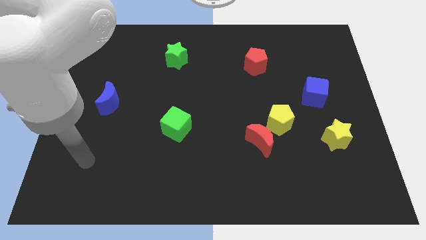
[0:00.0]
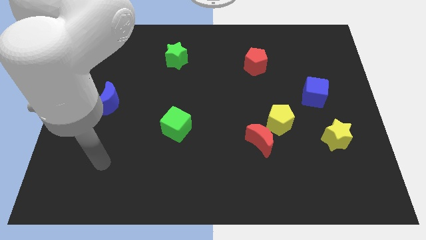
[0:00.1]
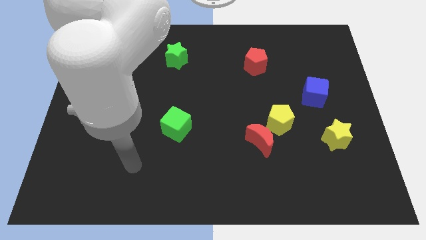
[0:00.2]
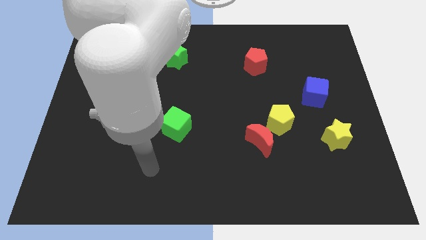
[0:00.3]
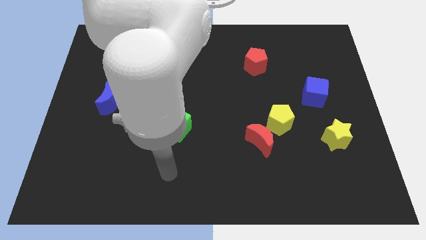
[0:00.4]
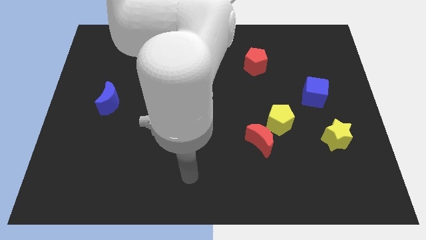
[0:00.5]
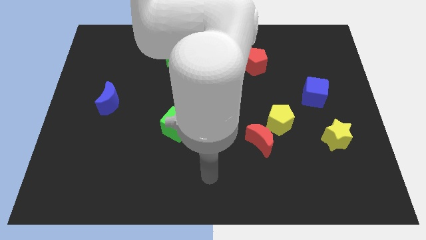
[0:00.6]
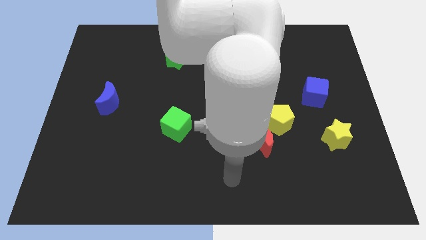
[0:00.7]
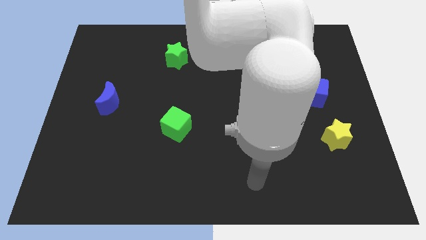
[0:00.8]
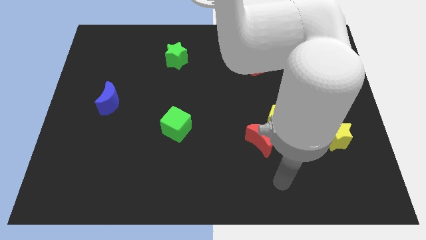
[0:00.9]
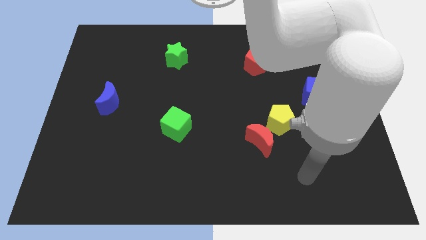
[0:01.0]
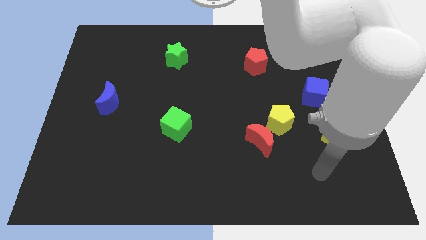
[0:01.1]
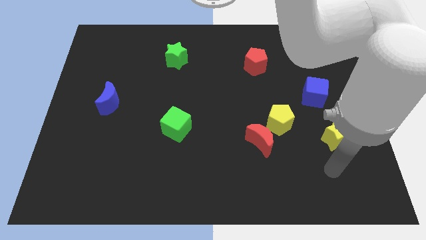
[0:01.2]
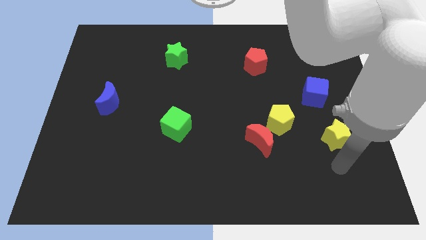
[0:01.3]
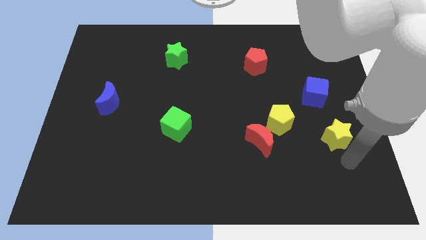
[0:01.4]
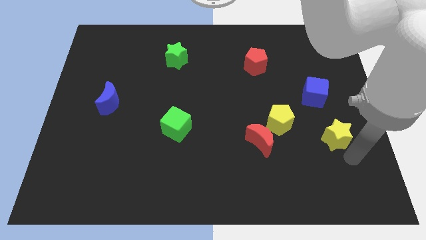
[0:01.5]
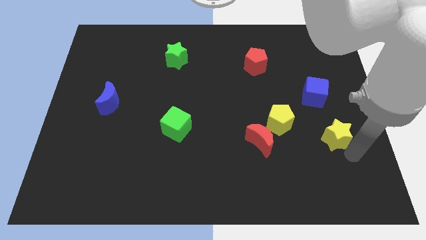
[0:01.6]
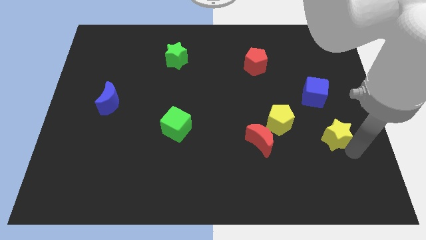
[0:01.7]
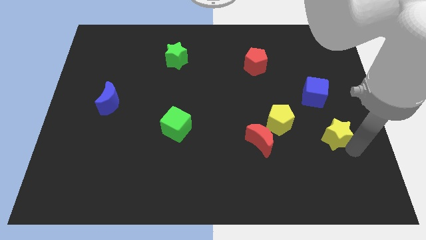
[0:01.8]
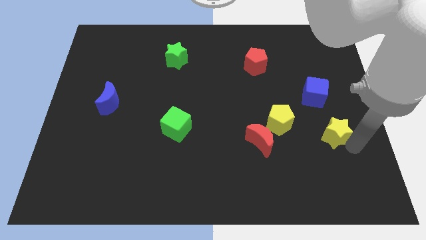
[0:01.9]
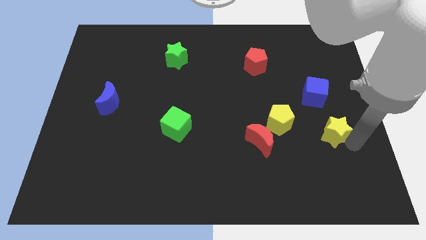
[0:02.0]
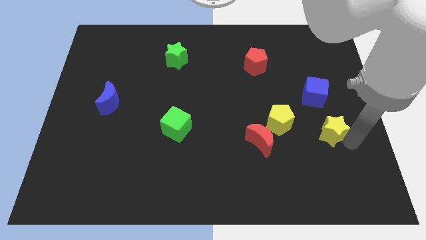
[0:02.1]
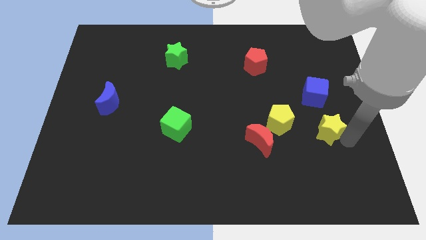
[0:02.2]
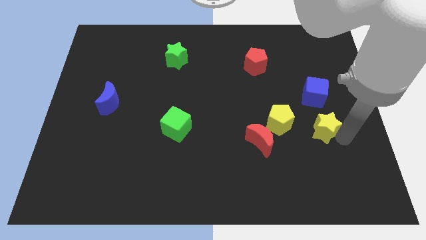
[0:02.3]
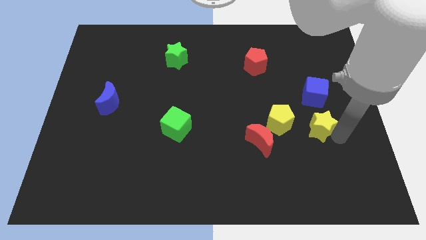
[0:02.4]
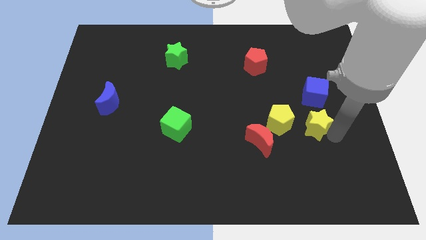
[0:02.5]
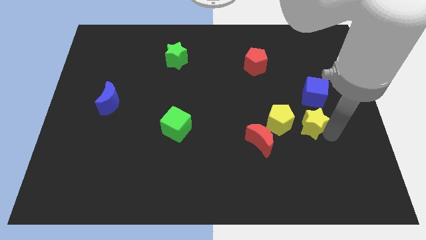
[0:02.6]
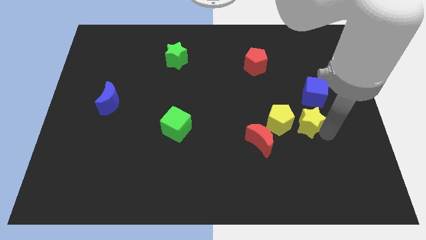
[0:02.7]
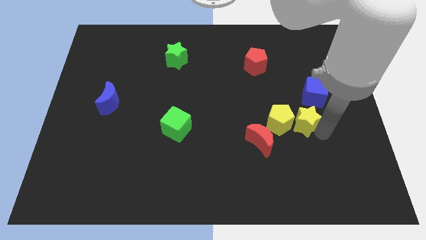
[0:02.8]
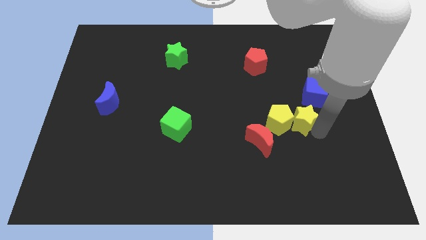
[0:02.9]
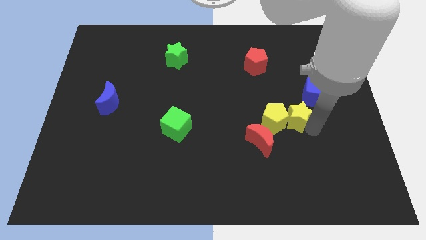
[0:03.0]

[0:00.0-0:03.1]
slide the yellow star to the yellow pentagon

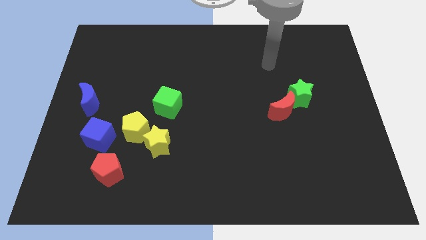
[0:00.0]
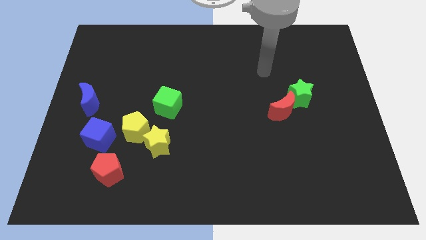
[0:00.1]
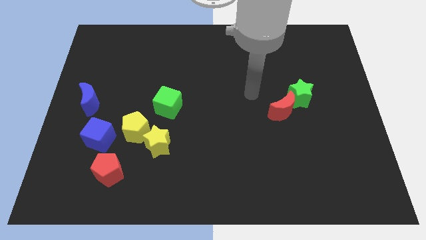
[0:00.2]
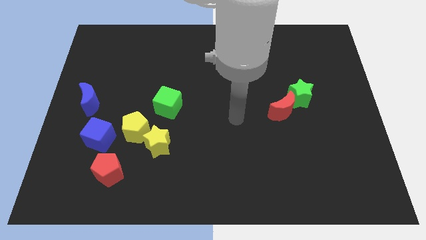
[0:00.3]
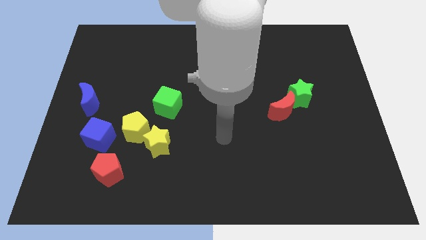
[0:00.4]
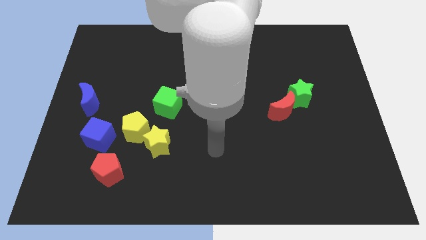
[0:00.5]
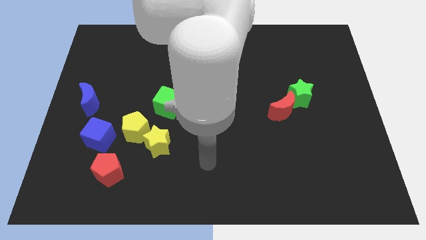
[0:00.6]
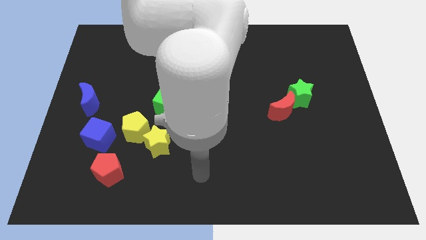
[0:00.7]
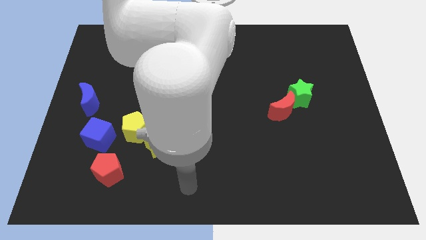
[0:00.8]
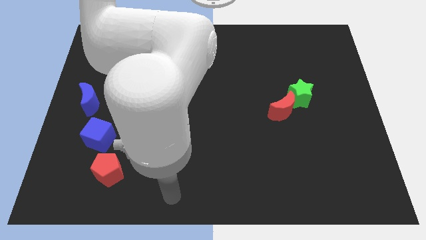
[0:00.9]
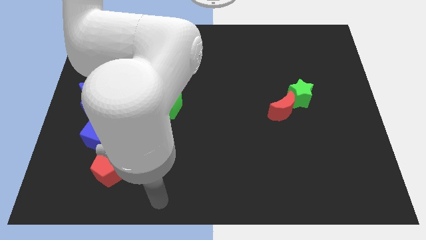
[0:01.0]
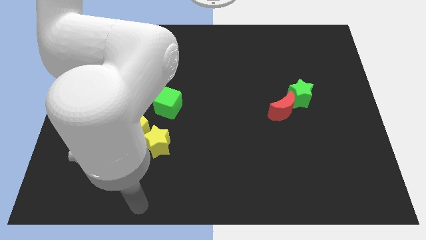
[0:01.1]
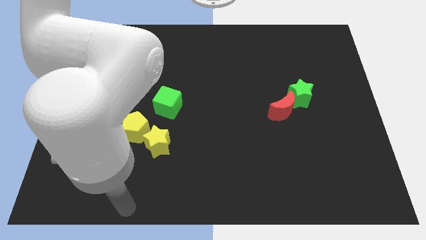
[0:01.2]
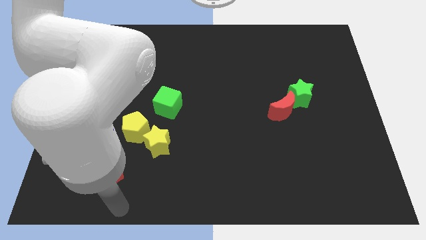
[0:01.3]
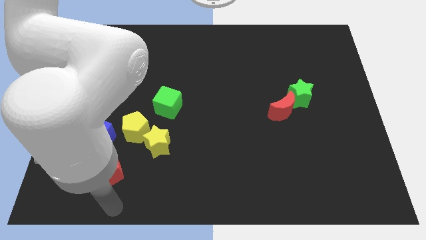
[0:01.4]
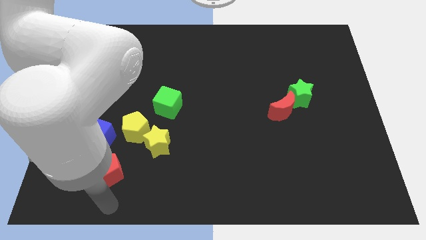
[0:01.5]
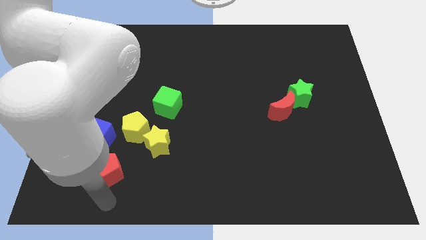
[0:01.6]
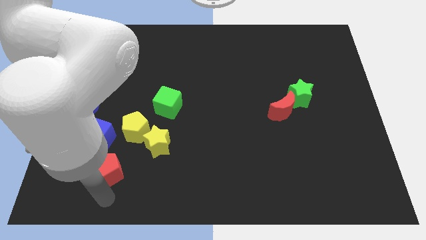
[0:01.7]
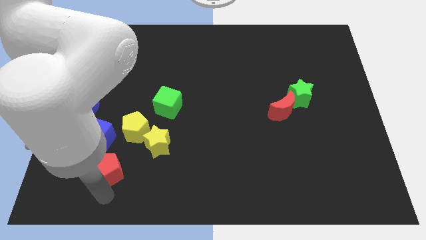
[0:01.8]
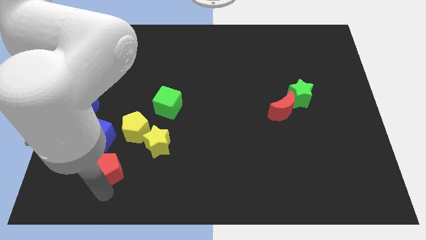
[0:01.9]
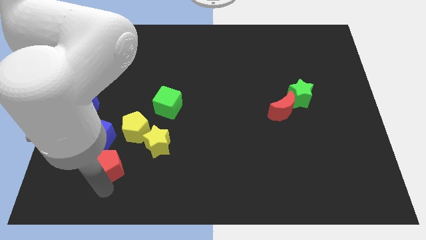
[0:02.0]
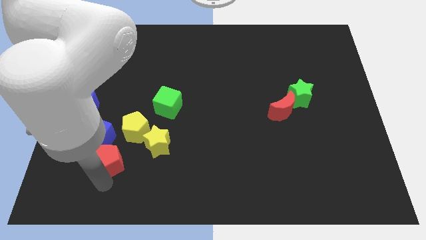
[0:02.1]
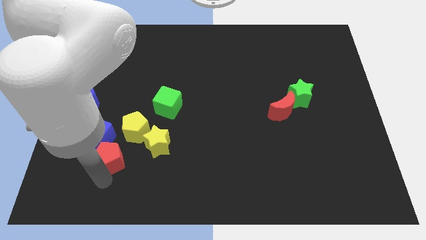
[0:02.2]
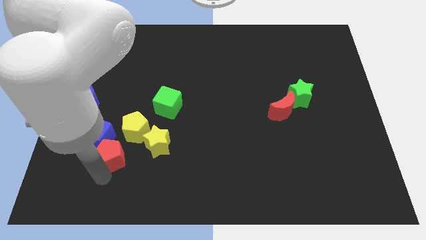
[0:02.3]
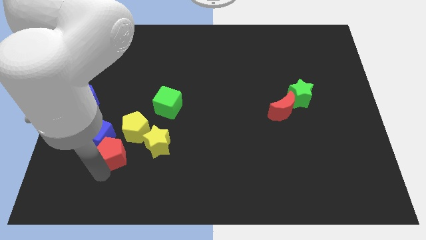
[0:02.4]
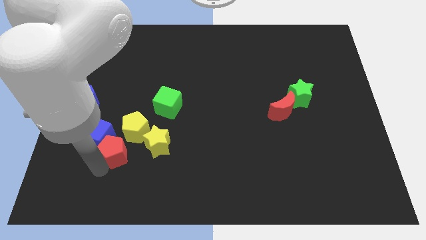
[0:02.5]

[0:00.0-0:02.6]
put the red pentagon close to the blue cube

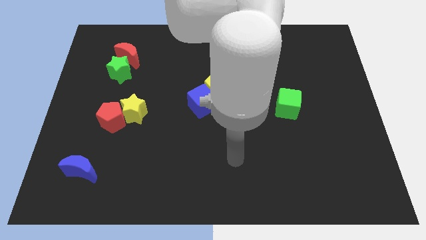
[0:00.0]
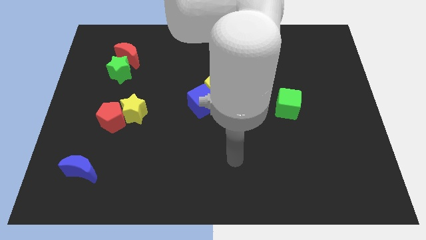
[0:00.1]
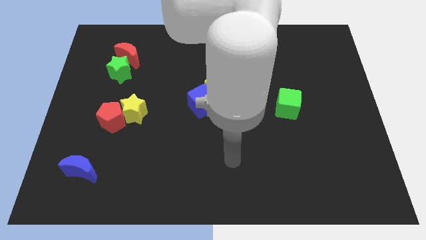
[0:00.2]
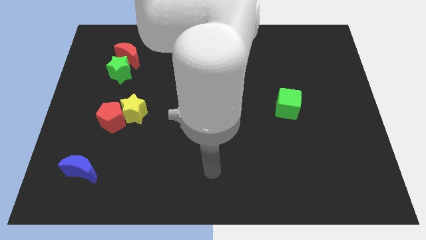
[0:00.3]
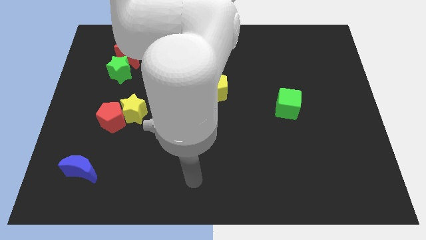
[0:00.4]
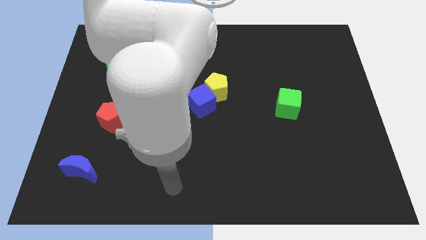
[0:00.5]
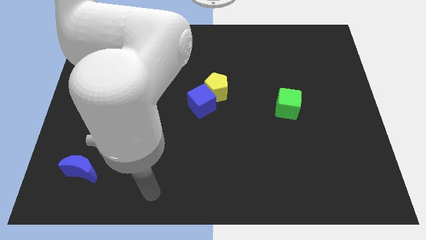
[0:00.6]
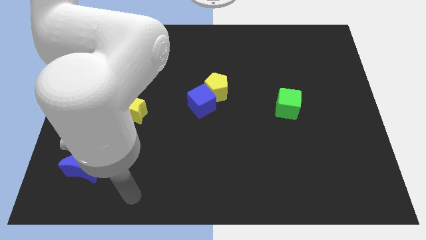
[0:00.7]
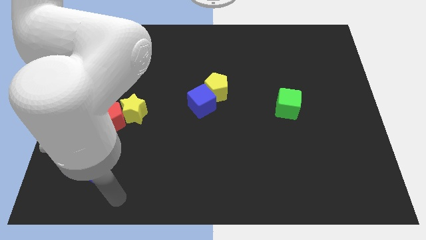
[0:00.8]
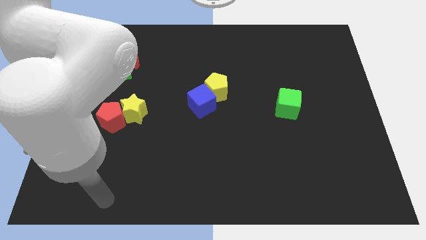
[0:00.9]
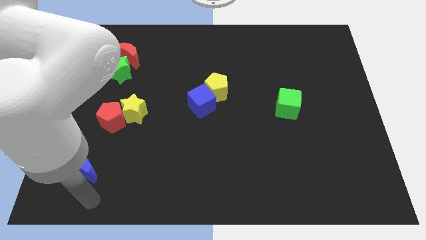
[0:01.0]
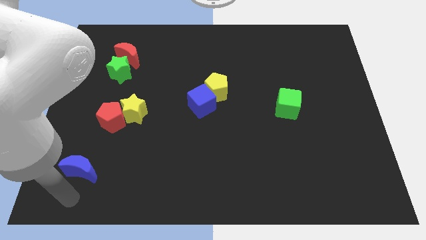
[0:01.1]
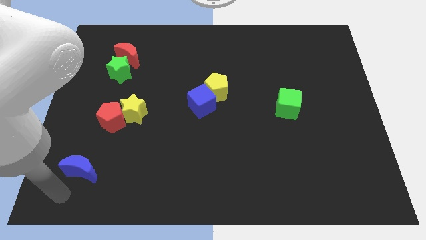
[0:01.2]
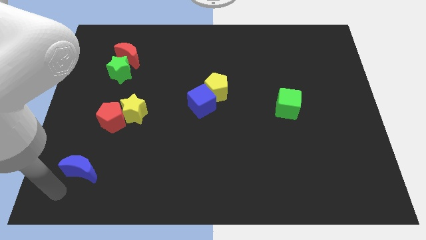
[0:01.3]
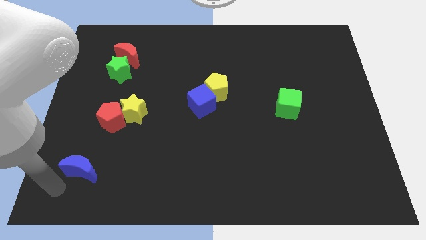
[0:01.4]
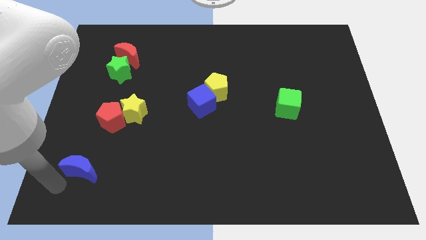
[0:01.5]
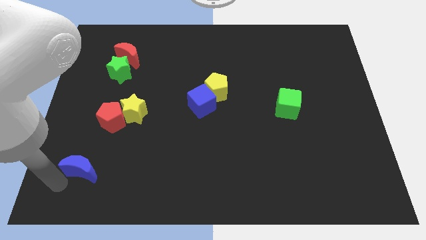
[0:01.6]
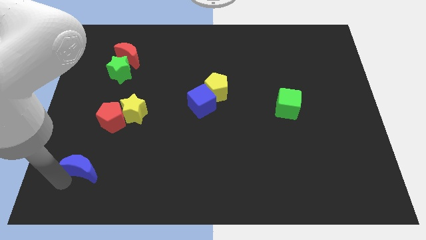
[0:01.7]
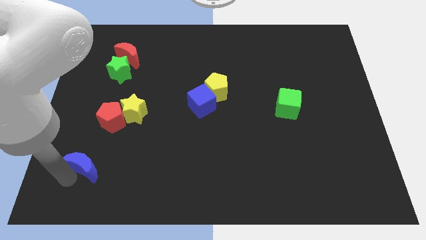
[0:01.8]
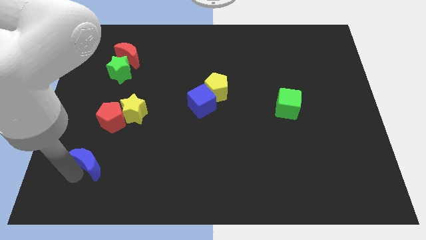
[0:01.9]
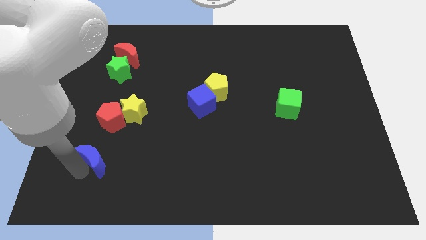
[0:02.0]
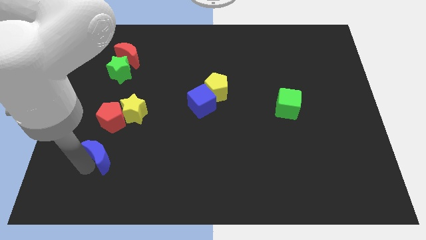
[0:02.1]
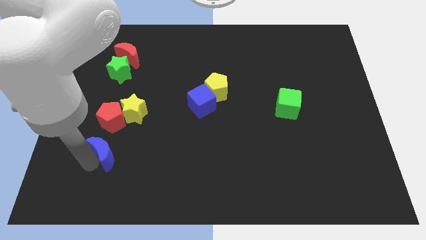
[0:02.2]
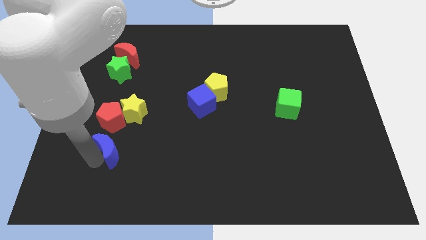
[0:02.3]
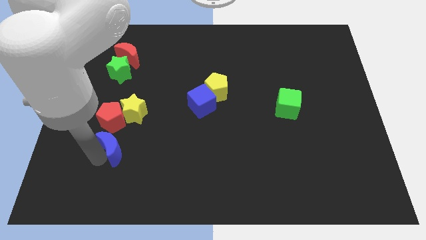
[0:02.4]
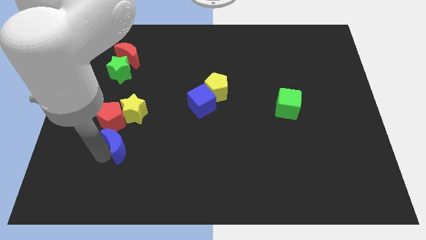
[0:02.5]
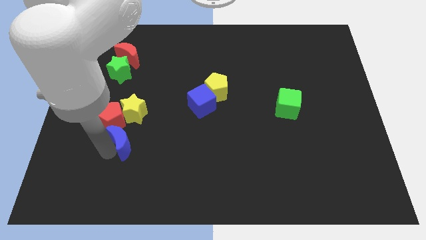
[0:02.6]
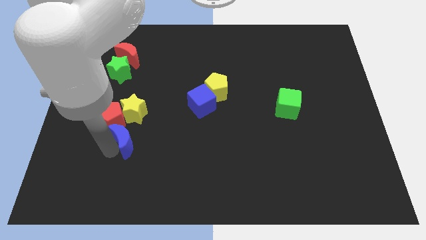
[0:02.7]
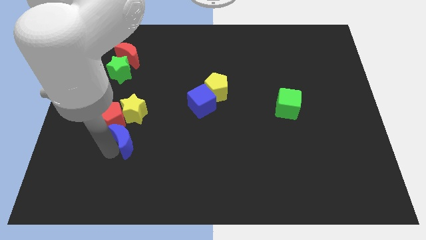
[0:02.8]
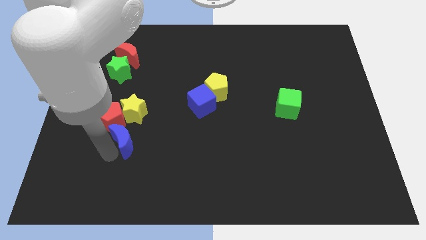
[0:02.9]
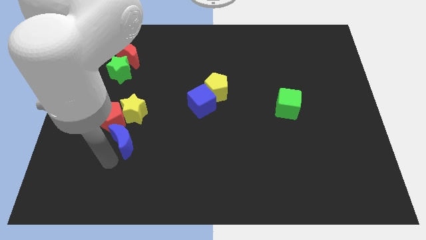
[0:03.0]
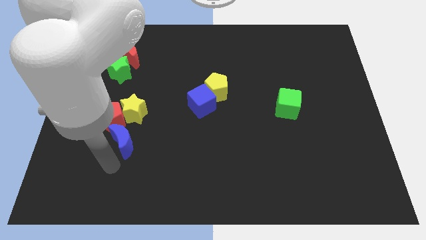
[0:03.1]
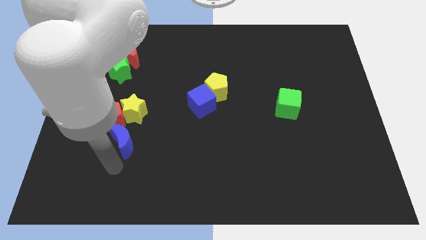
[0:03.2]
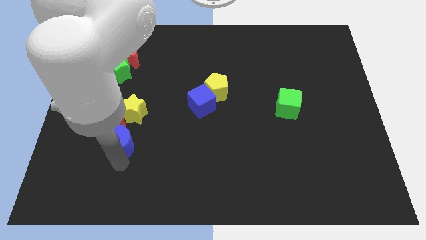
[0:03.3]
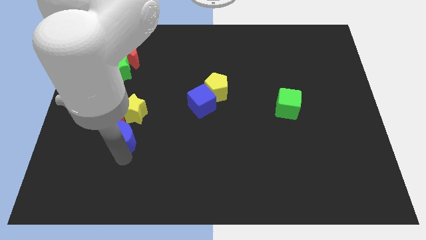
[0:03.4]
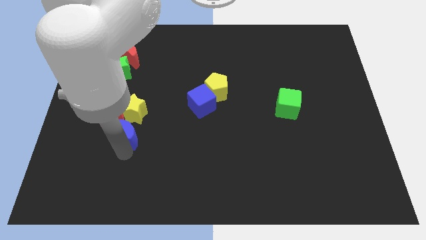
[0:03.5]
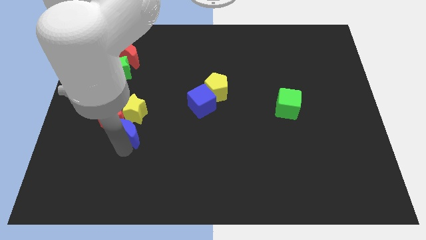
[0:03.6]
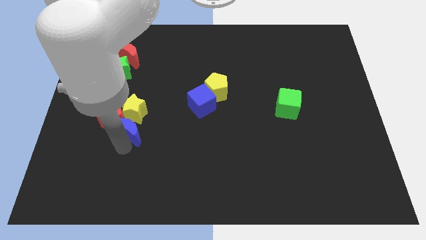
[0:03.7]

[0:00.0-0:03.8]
move the blue moon to the yellow star
